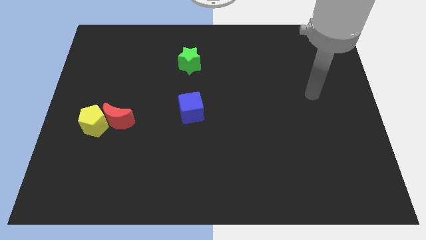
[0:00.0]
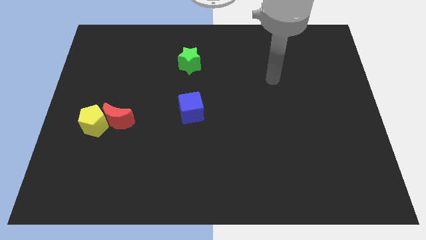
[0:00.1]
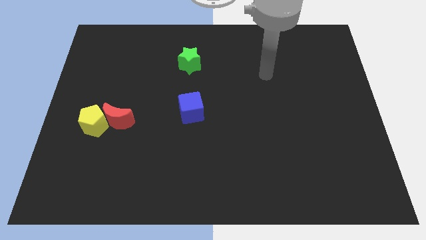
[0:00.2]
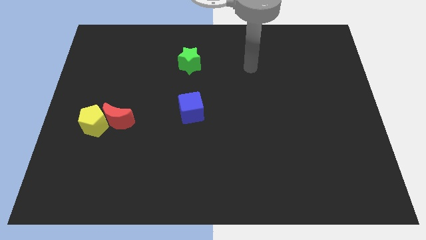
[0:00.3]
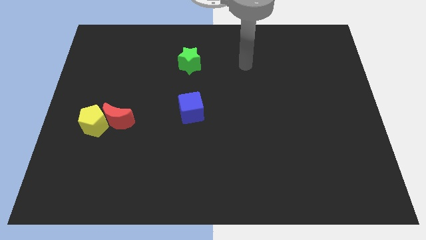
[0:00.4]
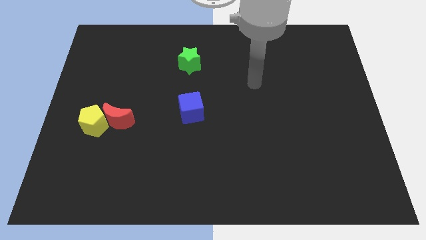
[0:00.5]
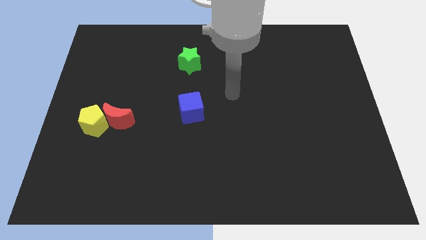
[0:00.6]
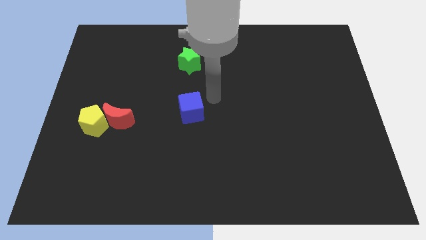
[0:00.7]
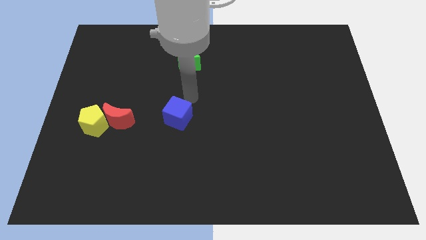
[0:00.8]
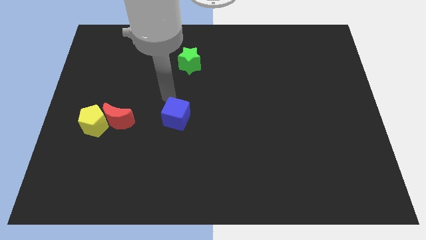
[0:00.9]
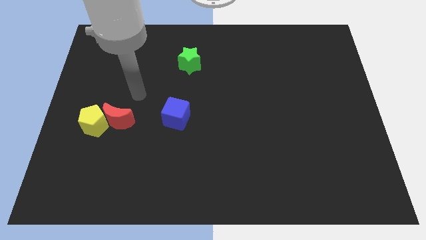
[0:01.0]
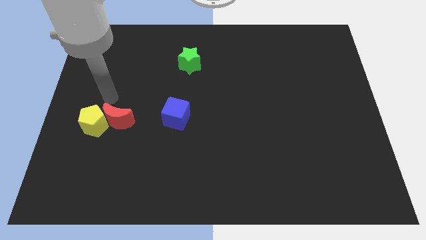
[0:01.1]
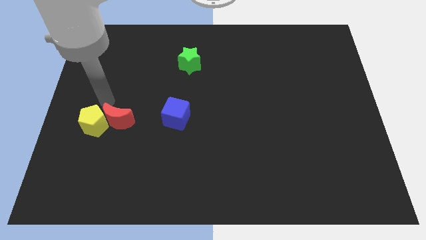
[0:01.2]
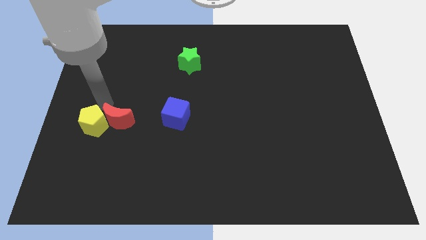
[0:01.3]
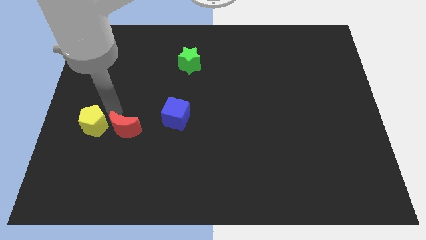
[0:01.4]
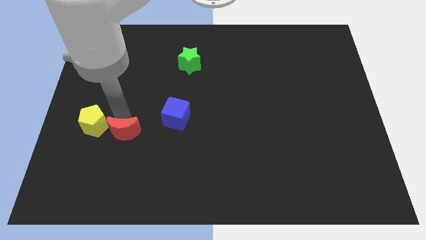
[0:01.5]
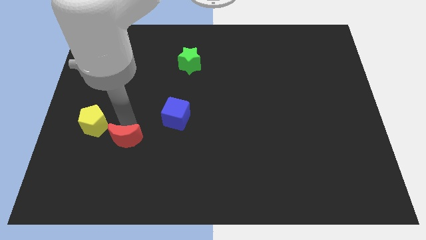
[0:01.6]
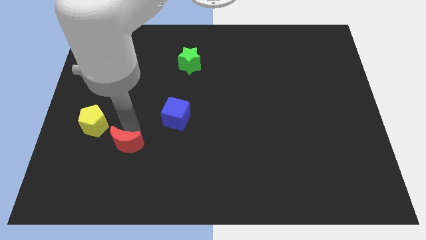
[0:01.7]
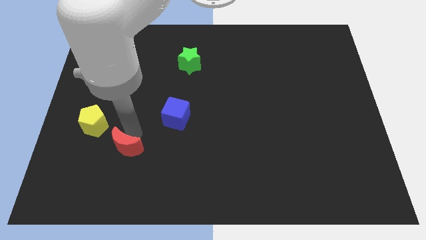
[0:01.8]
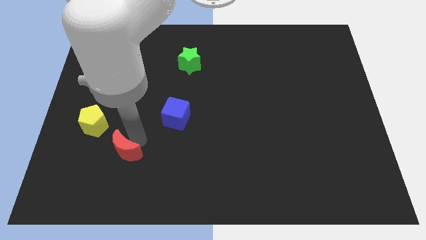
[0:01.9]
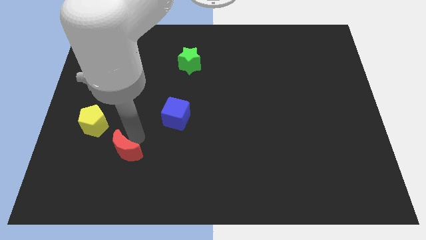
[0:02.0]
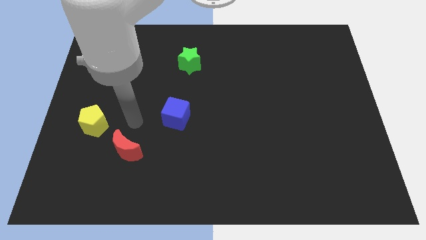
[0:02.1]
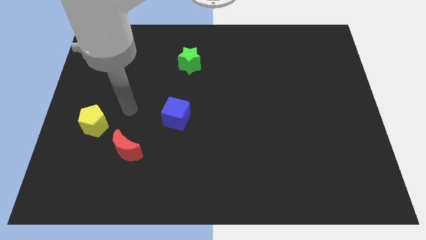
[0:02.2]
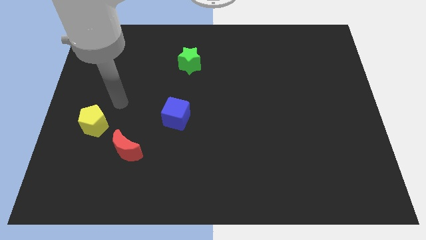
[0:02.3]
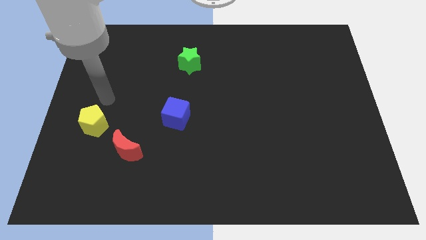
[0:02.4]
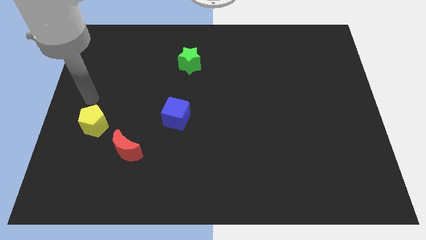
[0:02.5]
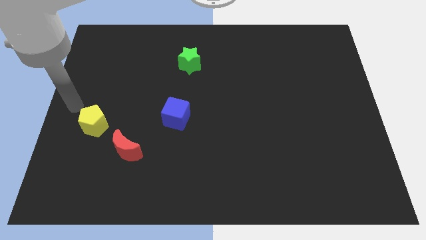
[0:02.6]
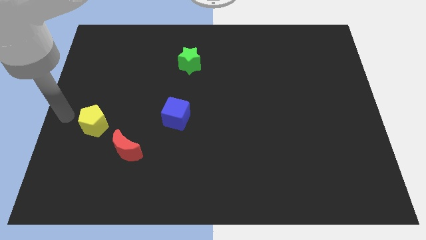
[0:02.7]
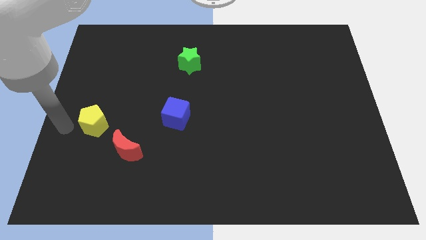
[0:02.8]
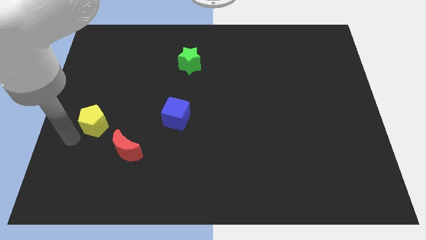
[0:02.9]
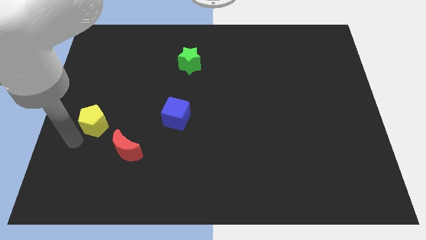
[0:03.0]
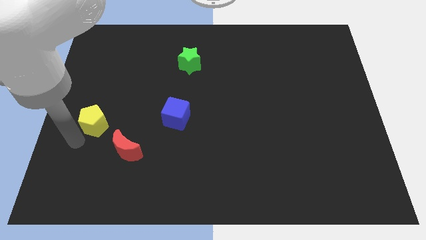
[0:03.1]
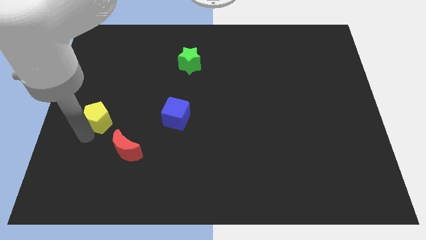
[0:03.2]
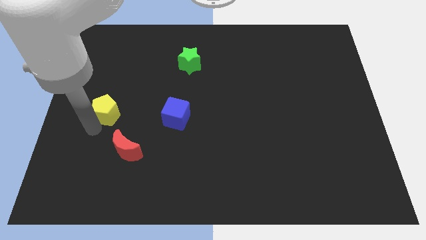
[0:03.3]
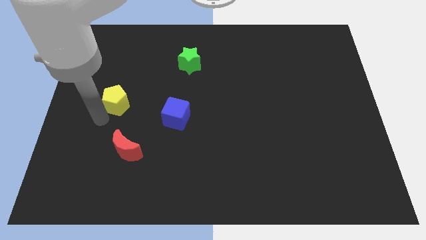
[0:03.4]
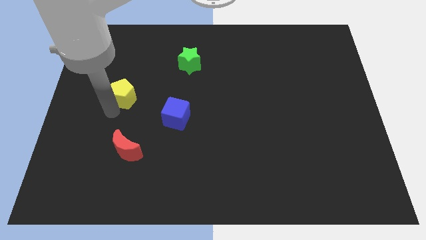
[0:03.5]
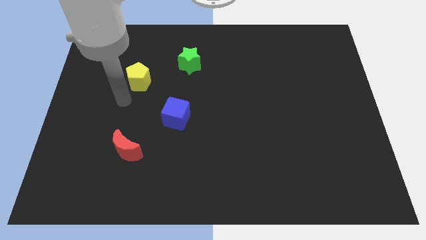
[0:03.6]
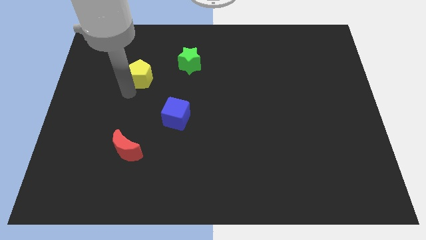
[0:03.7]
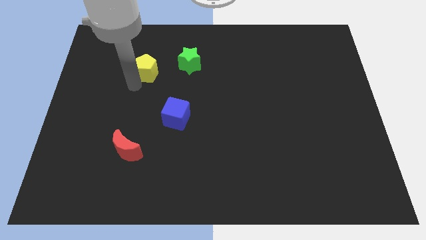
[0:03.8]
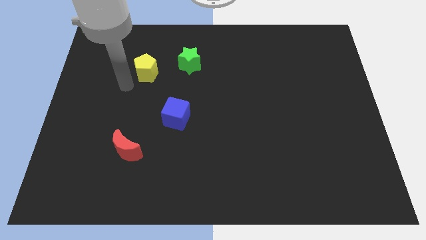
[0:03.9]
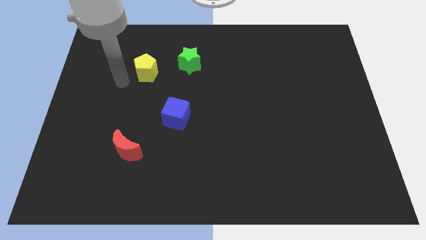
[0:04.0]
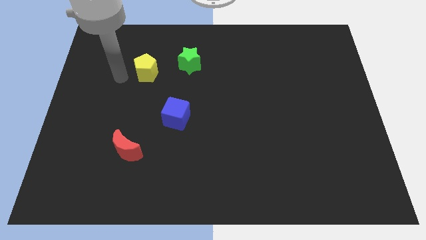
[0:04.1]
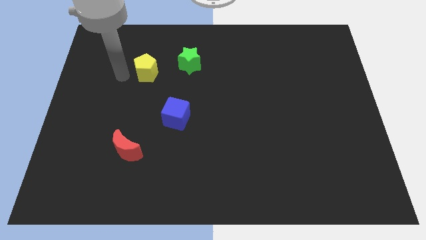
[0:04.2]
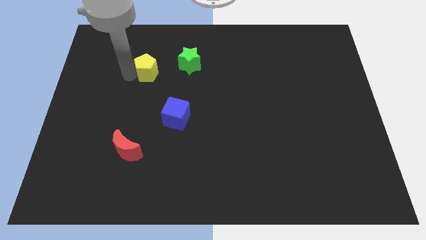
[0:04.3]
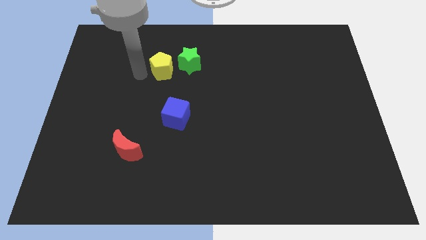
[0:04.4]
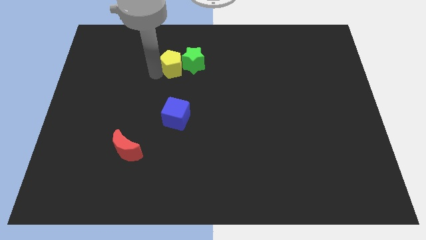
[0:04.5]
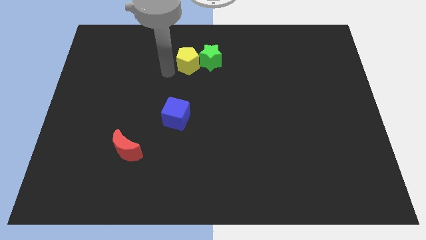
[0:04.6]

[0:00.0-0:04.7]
slide the yellow block close to the green block

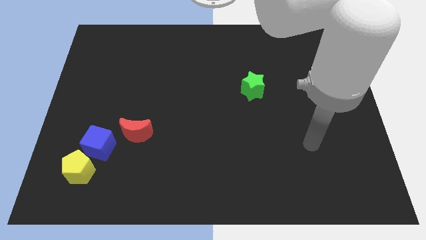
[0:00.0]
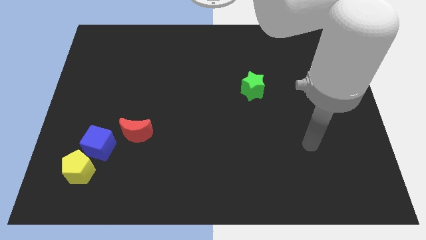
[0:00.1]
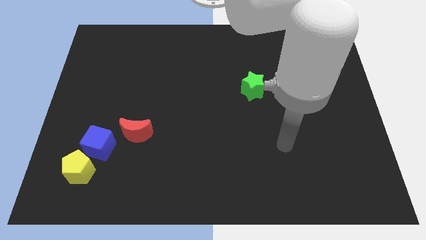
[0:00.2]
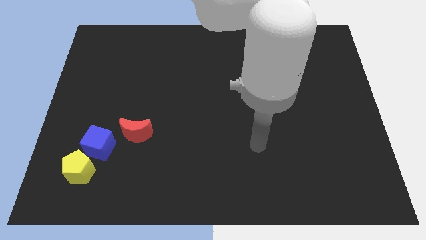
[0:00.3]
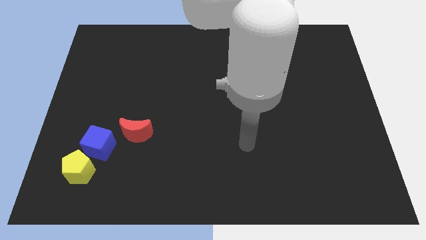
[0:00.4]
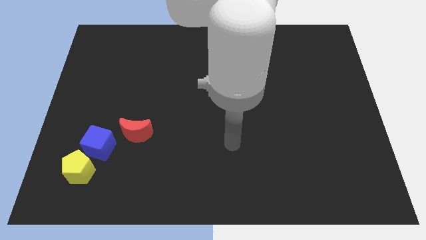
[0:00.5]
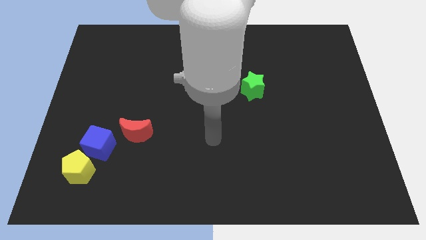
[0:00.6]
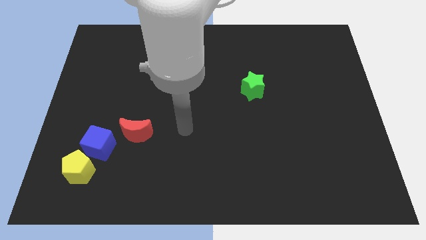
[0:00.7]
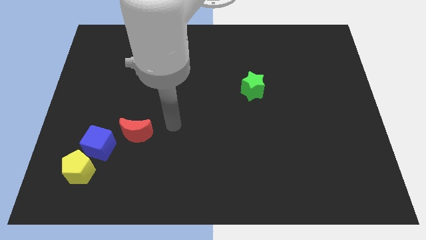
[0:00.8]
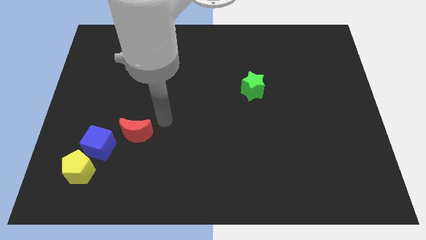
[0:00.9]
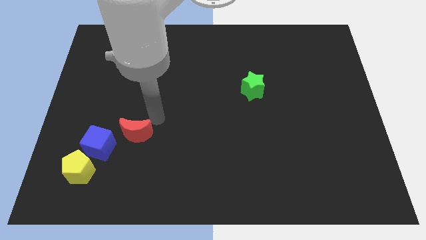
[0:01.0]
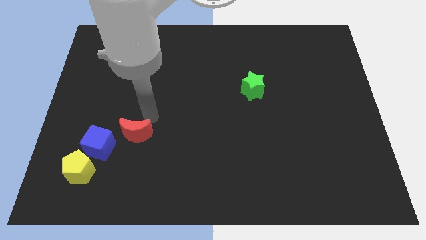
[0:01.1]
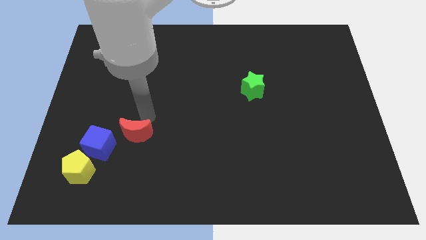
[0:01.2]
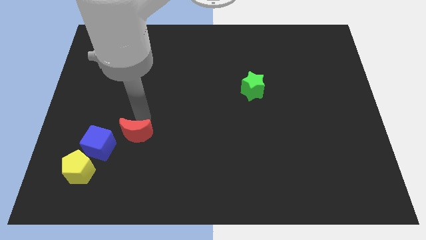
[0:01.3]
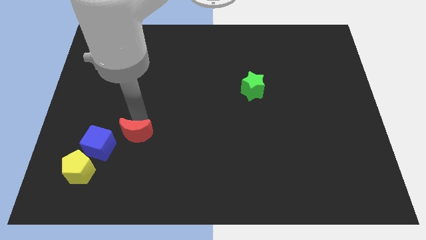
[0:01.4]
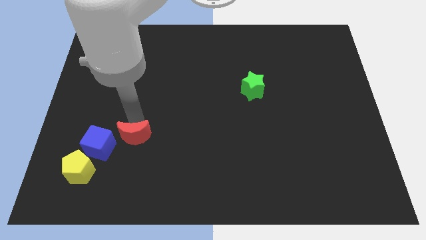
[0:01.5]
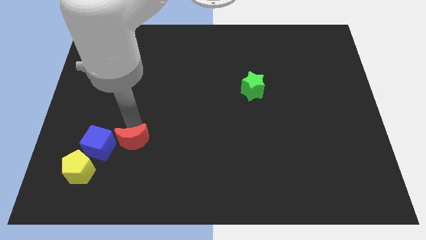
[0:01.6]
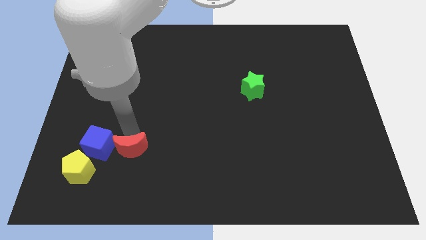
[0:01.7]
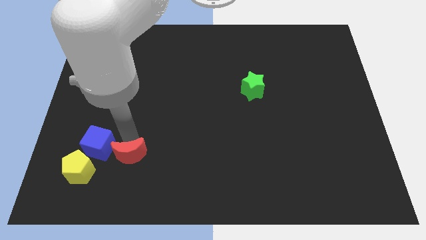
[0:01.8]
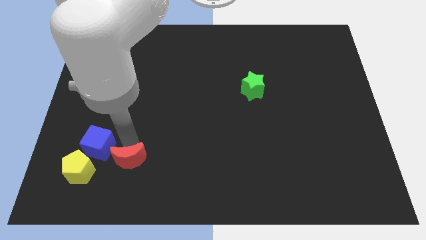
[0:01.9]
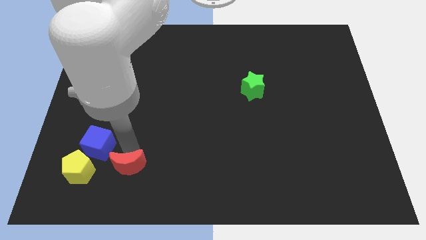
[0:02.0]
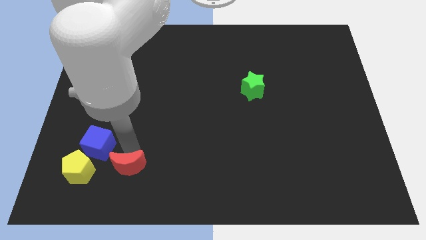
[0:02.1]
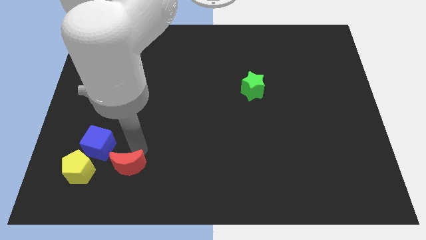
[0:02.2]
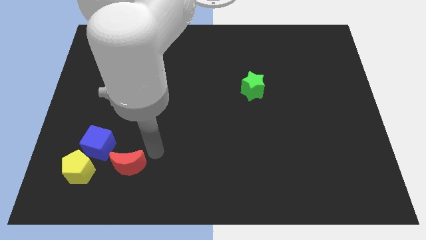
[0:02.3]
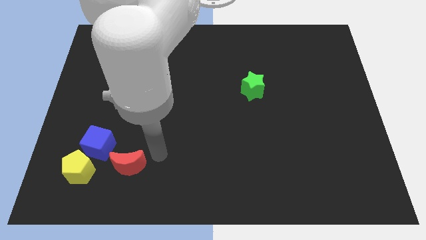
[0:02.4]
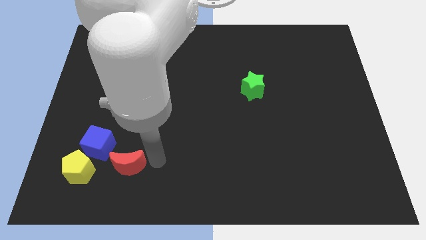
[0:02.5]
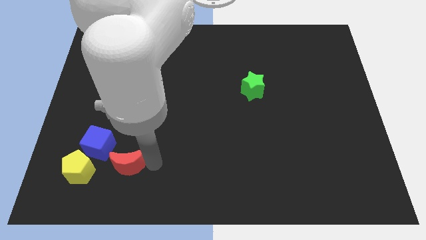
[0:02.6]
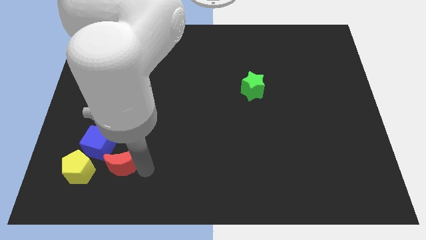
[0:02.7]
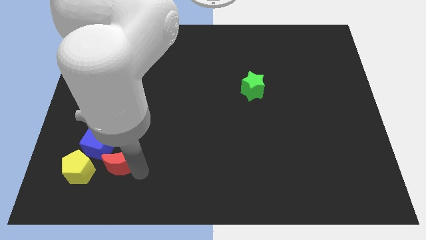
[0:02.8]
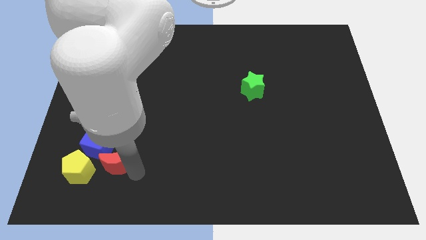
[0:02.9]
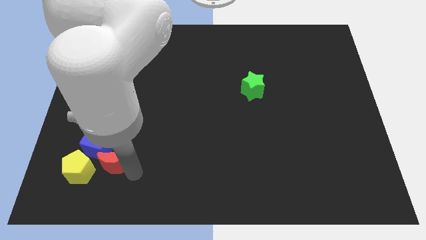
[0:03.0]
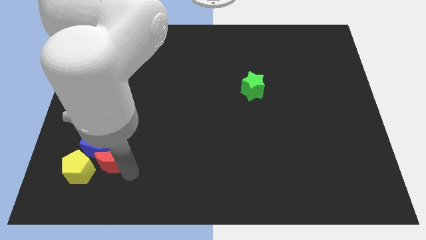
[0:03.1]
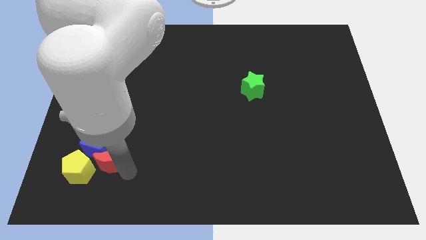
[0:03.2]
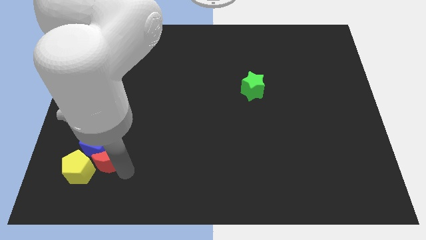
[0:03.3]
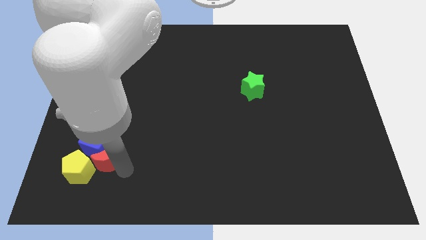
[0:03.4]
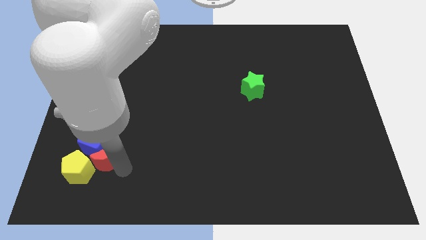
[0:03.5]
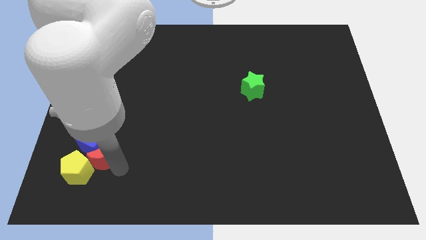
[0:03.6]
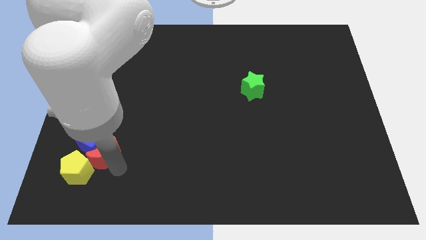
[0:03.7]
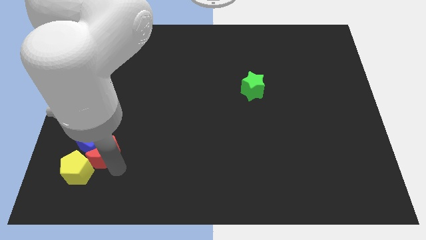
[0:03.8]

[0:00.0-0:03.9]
move the red block next to the pentagon
